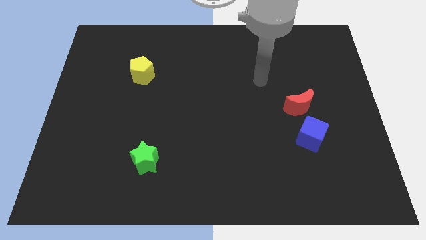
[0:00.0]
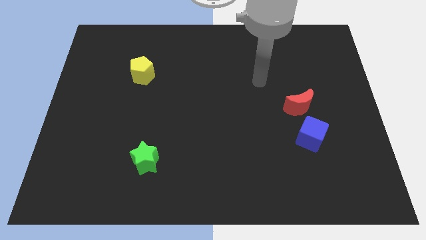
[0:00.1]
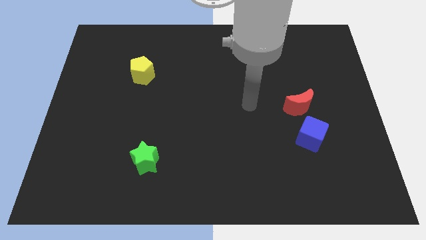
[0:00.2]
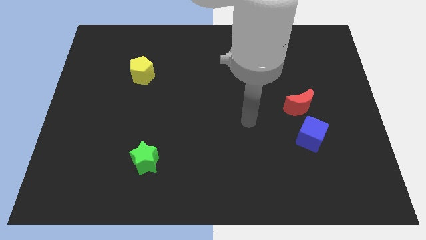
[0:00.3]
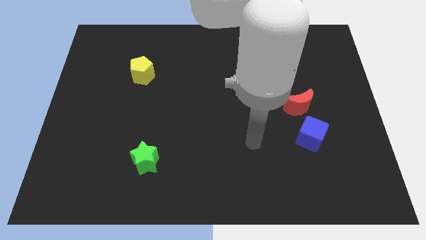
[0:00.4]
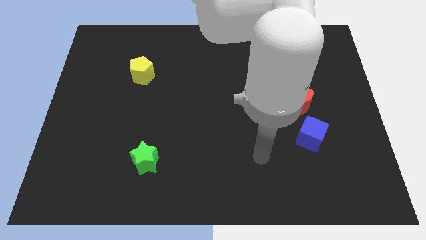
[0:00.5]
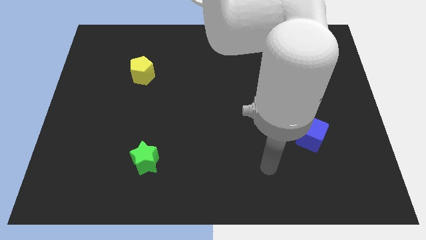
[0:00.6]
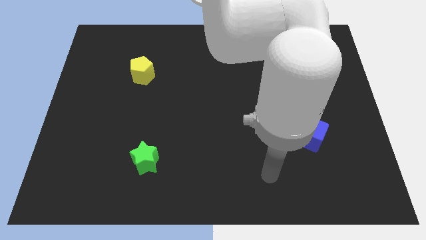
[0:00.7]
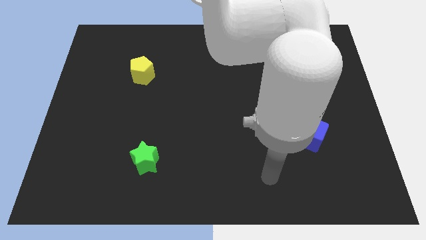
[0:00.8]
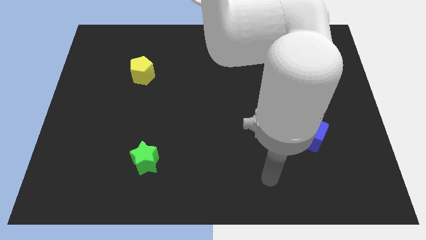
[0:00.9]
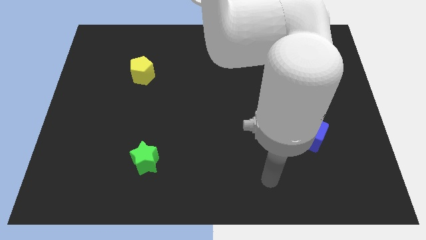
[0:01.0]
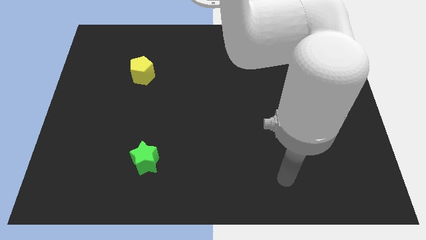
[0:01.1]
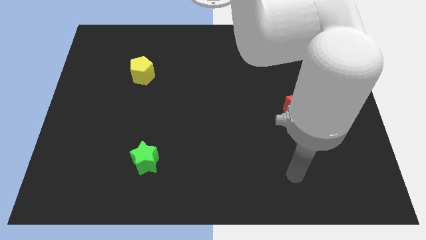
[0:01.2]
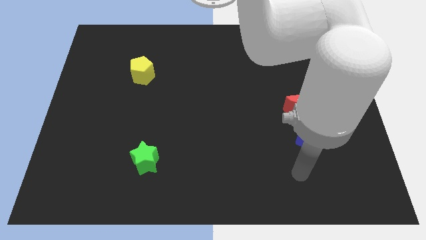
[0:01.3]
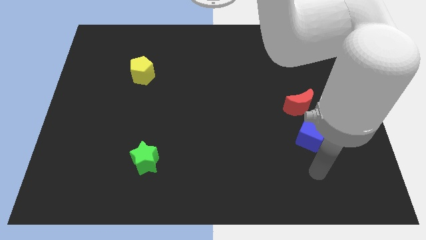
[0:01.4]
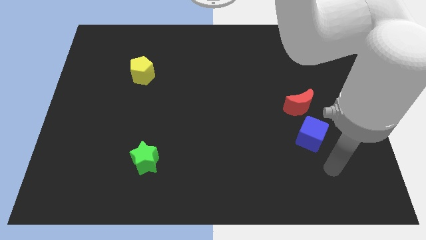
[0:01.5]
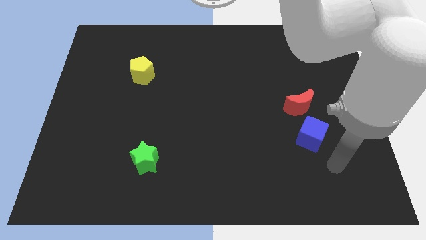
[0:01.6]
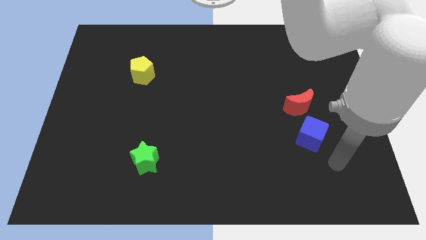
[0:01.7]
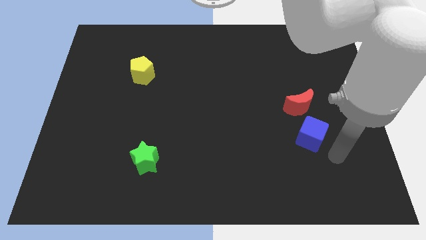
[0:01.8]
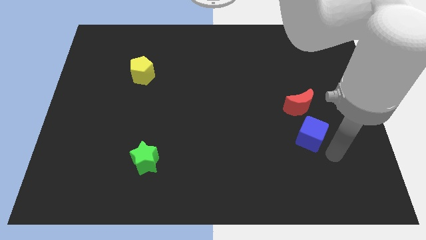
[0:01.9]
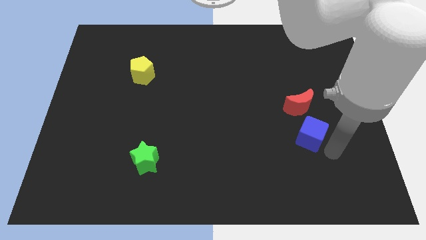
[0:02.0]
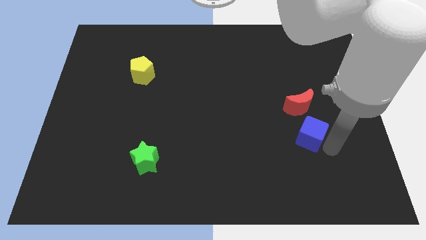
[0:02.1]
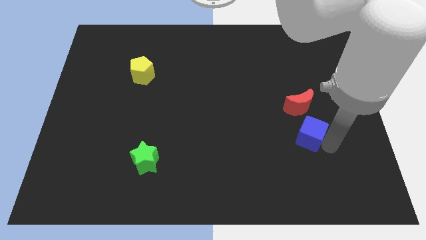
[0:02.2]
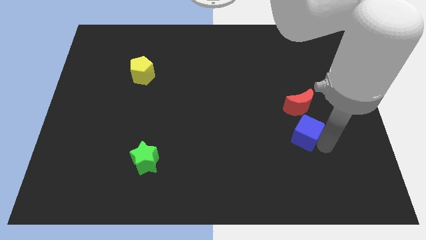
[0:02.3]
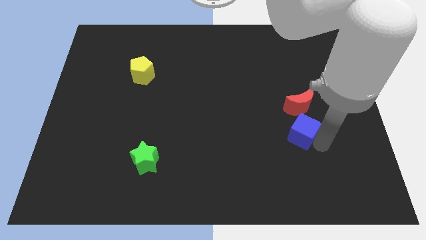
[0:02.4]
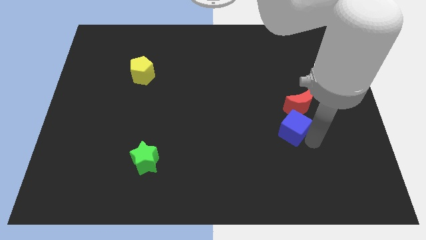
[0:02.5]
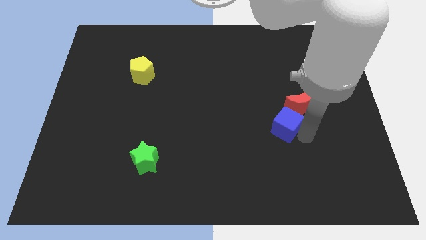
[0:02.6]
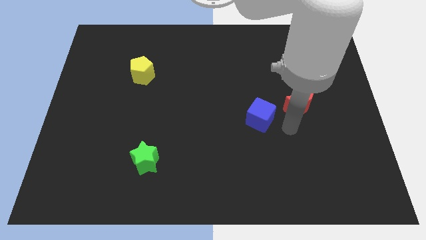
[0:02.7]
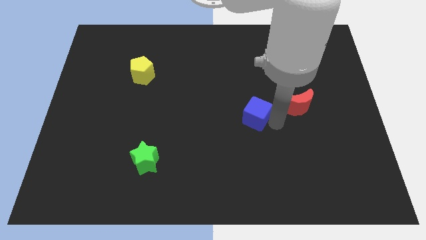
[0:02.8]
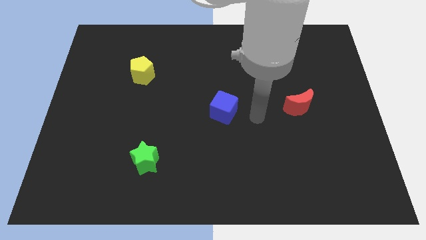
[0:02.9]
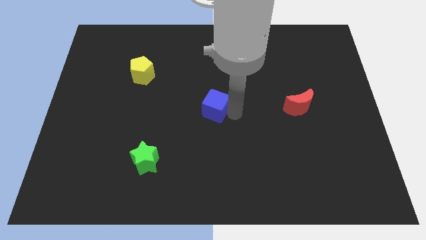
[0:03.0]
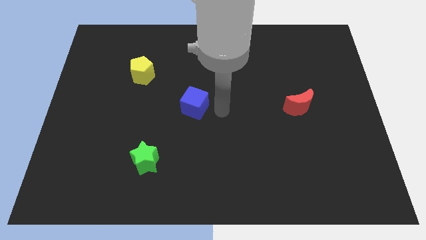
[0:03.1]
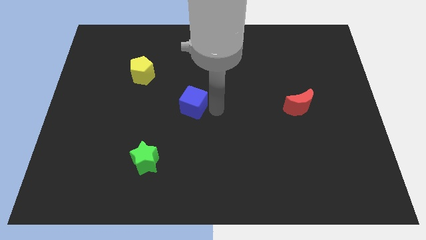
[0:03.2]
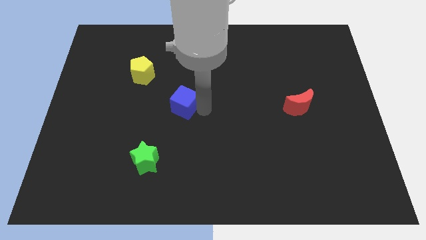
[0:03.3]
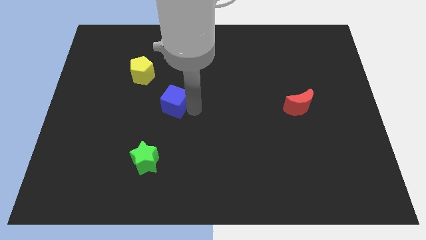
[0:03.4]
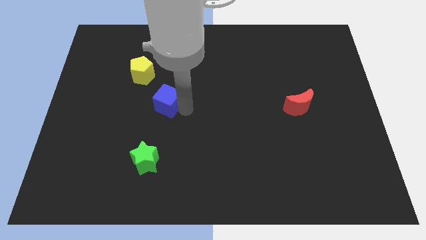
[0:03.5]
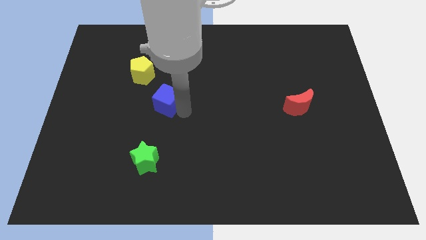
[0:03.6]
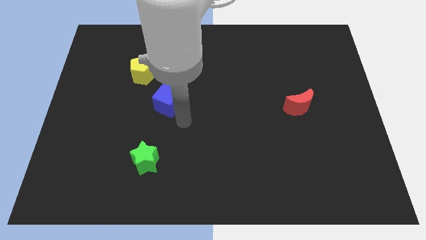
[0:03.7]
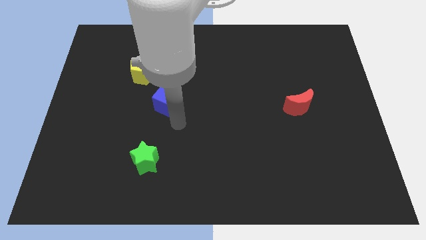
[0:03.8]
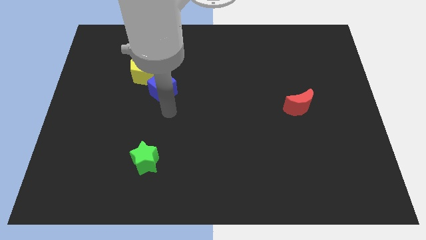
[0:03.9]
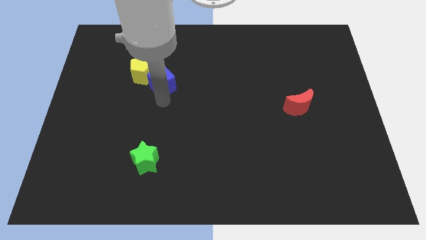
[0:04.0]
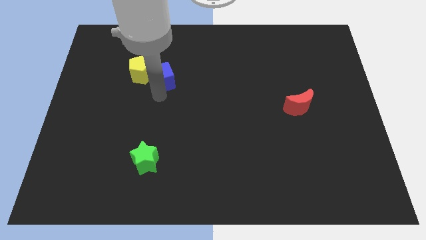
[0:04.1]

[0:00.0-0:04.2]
move the blue block towards the yellow block

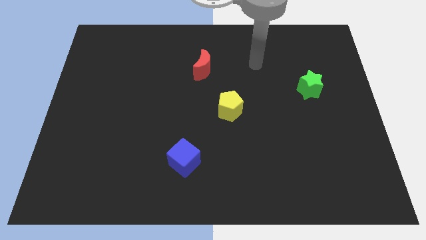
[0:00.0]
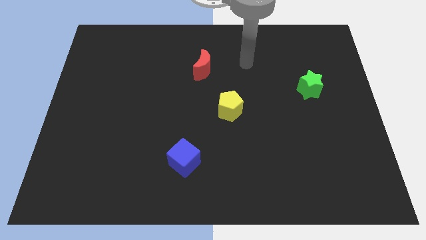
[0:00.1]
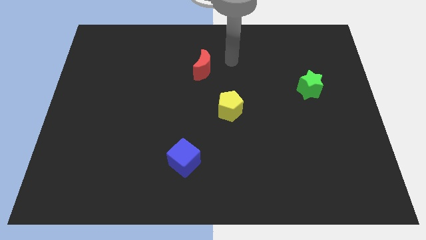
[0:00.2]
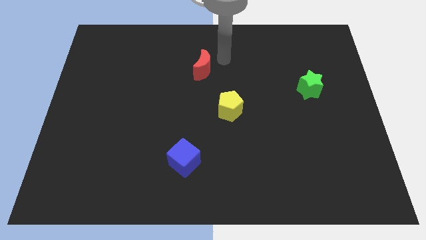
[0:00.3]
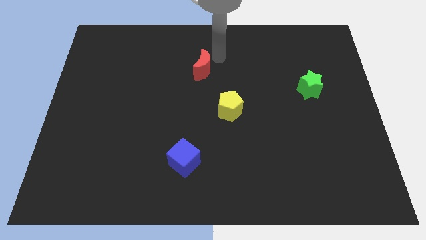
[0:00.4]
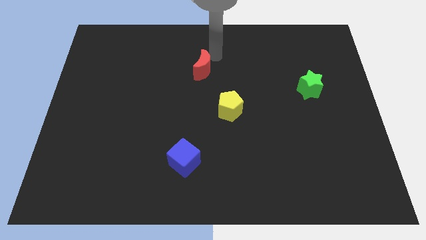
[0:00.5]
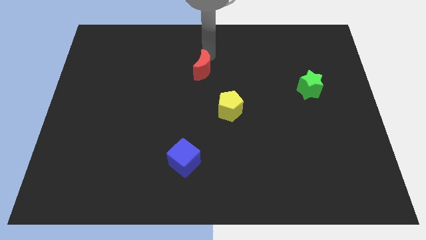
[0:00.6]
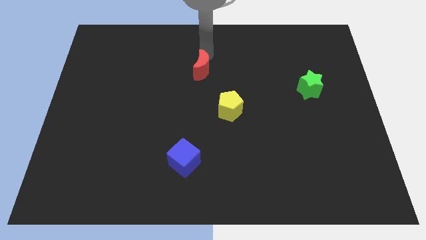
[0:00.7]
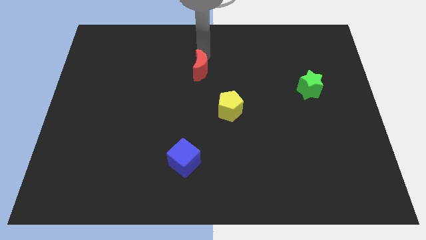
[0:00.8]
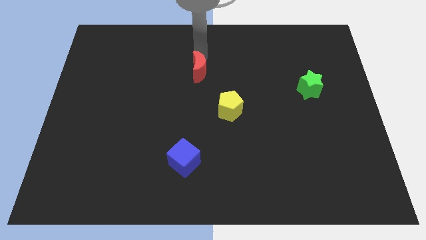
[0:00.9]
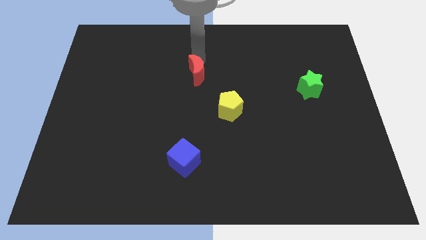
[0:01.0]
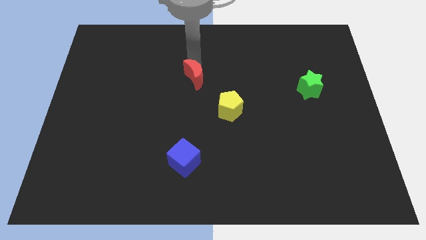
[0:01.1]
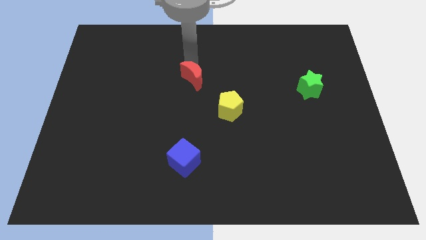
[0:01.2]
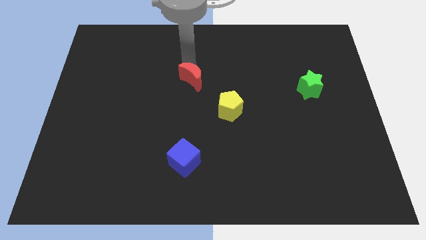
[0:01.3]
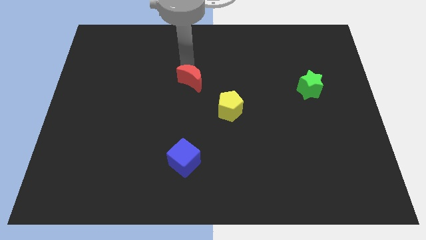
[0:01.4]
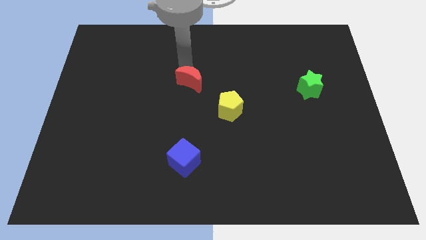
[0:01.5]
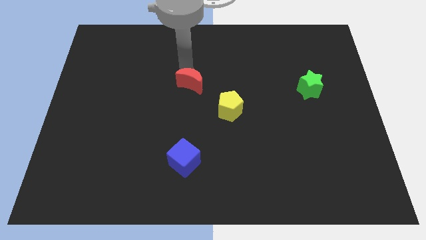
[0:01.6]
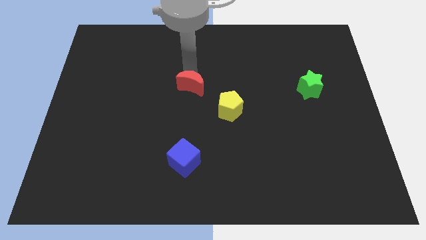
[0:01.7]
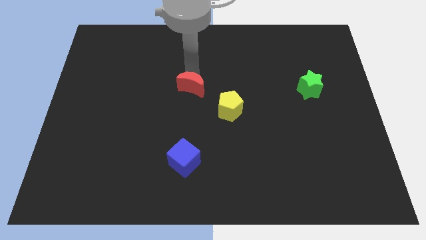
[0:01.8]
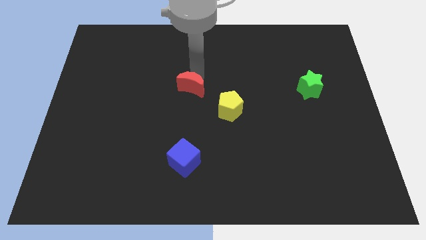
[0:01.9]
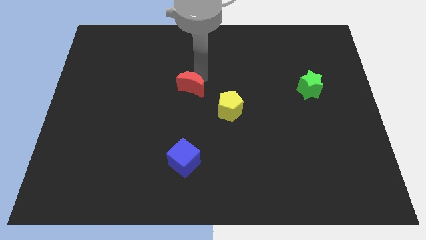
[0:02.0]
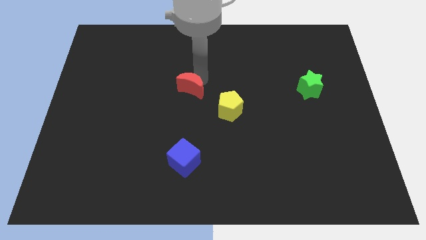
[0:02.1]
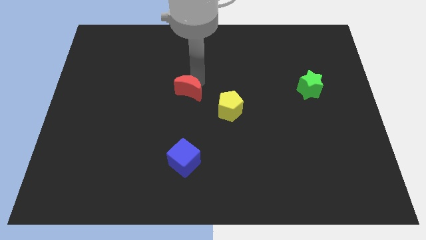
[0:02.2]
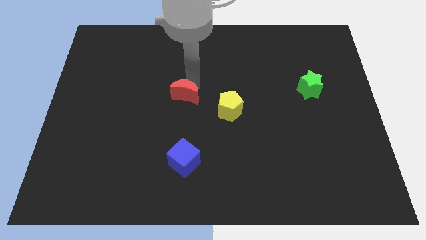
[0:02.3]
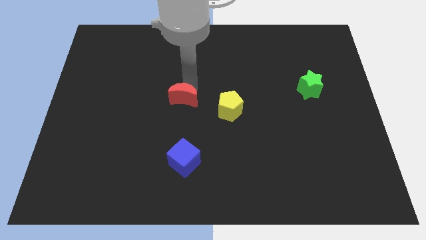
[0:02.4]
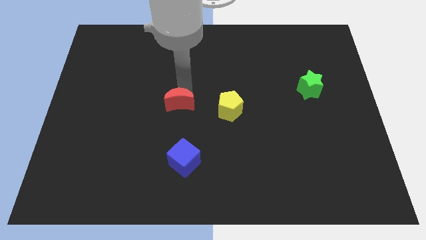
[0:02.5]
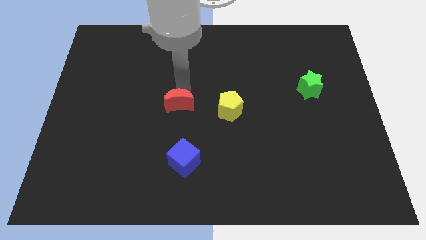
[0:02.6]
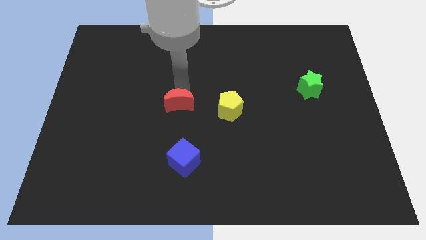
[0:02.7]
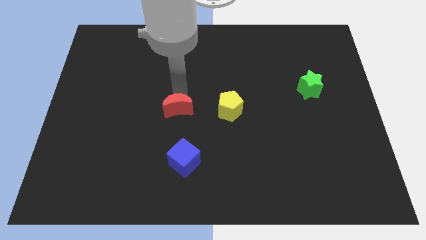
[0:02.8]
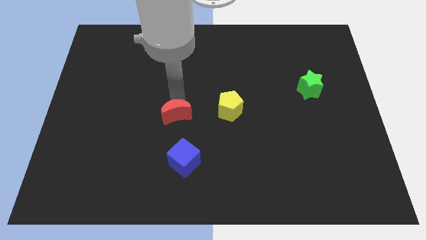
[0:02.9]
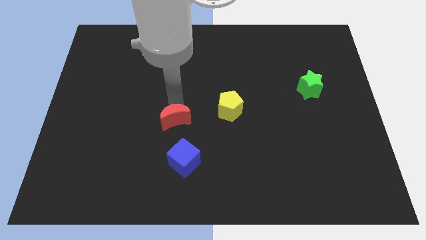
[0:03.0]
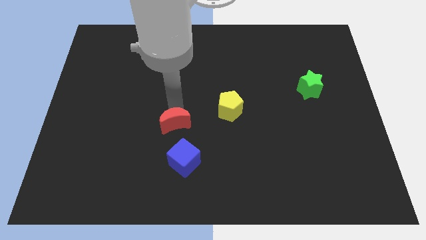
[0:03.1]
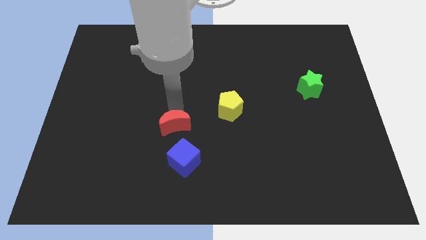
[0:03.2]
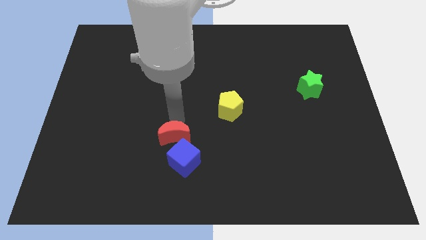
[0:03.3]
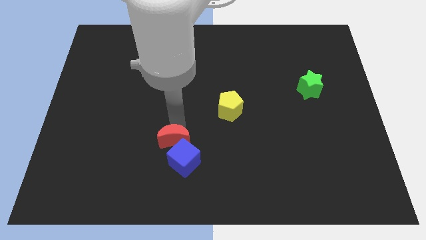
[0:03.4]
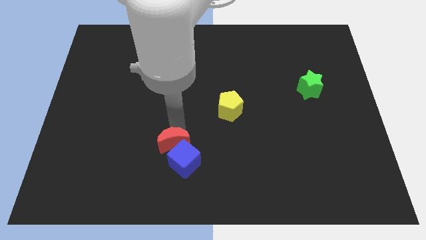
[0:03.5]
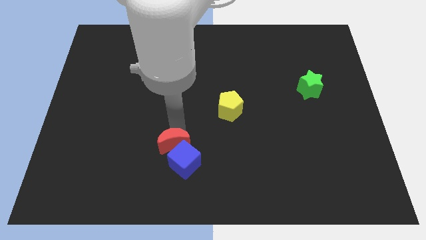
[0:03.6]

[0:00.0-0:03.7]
put the red block next to the cube

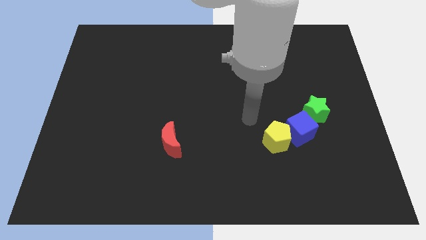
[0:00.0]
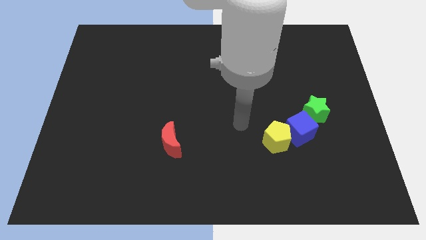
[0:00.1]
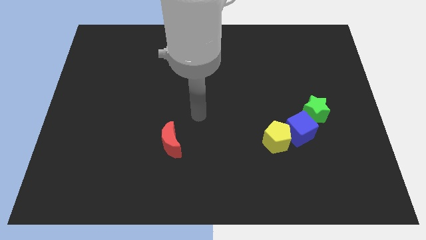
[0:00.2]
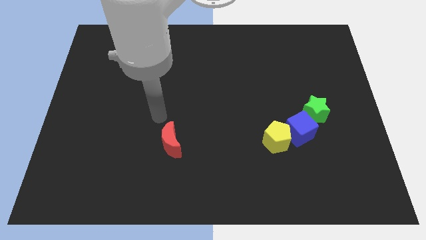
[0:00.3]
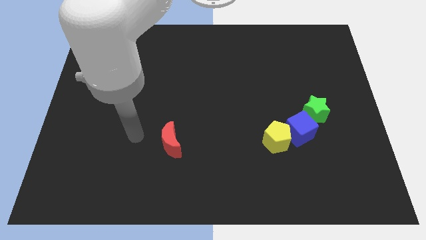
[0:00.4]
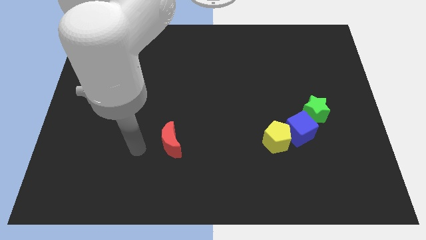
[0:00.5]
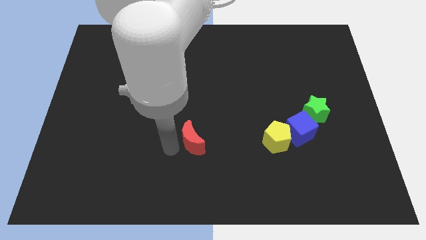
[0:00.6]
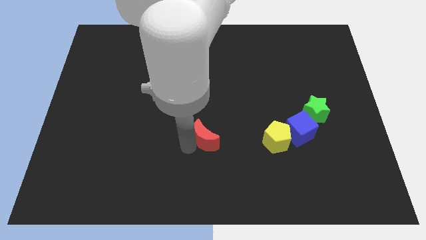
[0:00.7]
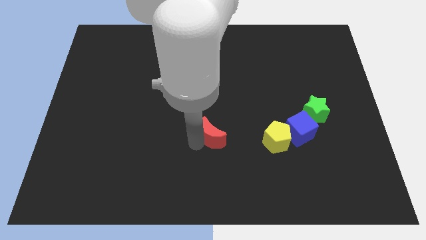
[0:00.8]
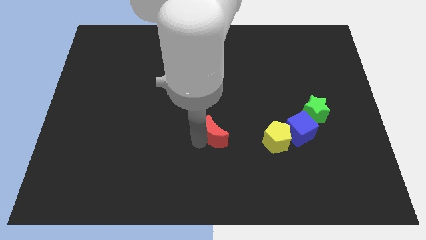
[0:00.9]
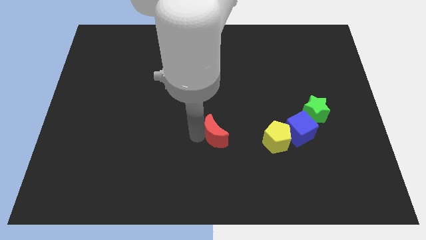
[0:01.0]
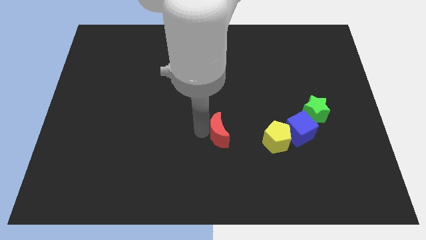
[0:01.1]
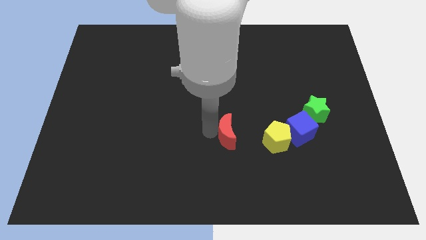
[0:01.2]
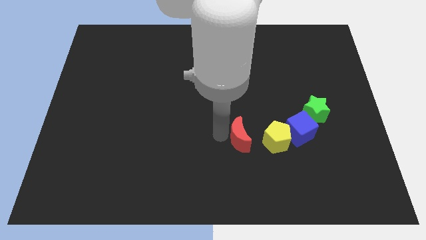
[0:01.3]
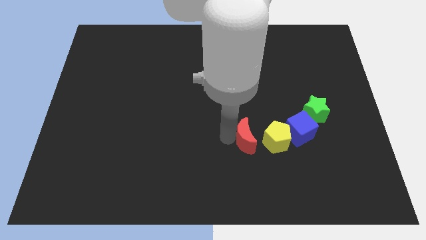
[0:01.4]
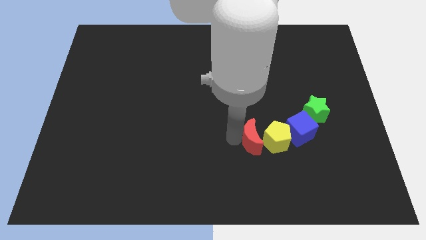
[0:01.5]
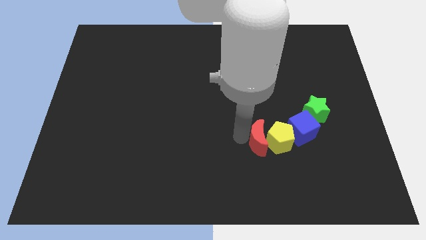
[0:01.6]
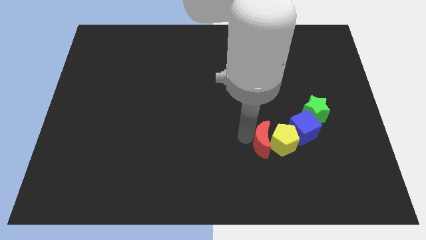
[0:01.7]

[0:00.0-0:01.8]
slide the red moon close to the pentagon
